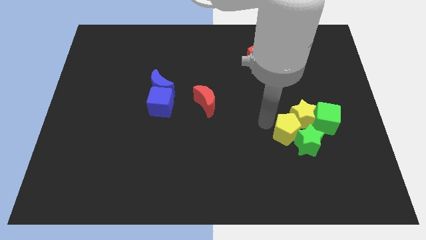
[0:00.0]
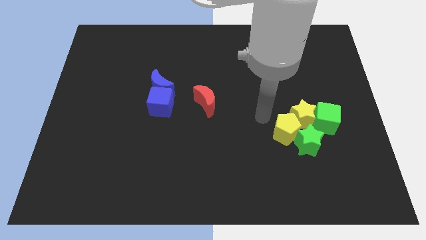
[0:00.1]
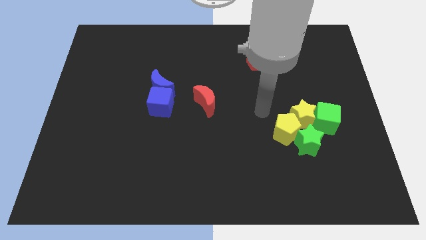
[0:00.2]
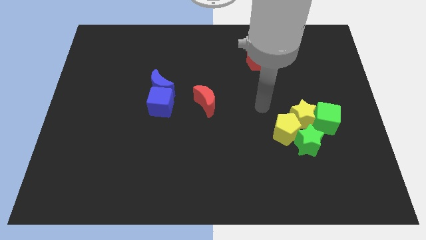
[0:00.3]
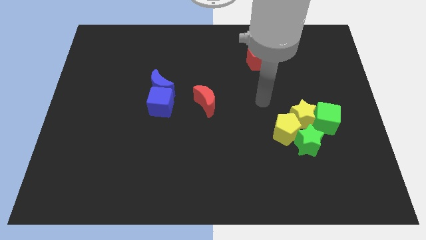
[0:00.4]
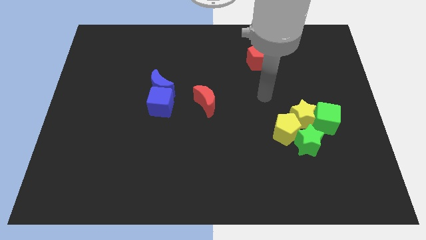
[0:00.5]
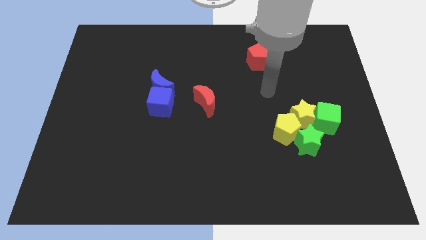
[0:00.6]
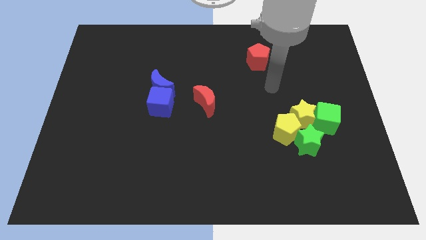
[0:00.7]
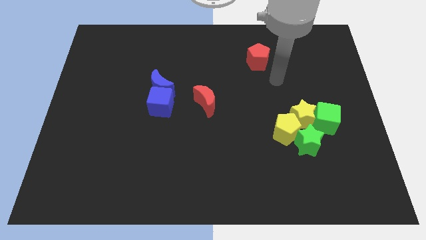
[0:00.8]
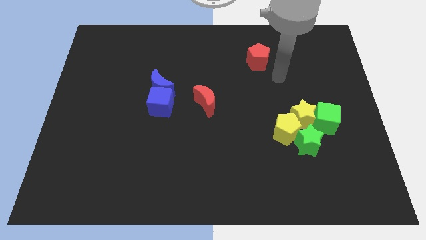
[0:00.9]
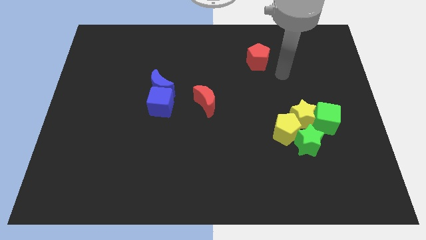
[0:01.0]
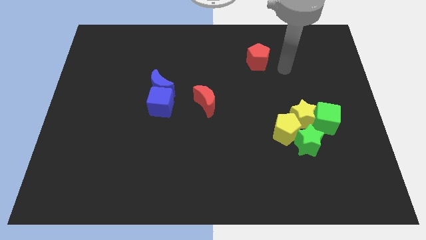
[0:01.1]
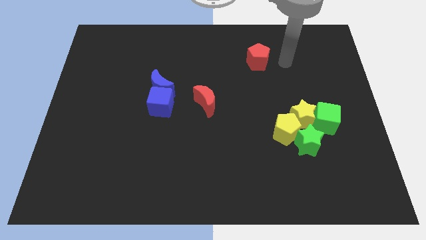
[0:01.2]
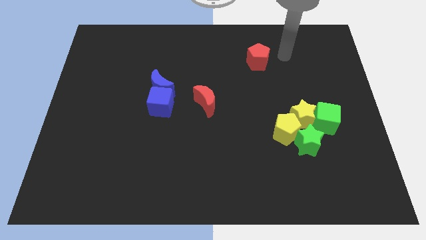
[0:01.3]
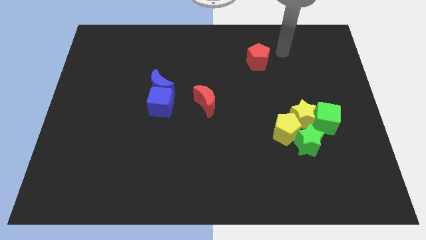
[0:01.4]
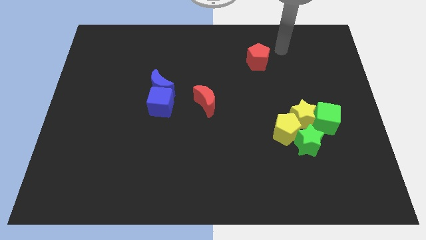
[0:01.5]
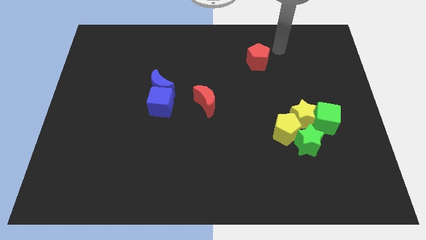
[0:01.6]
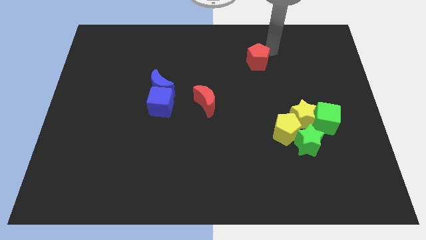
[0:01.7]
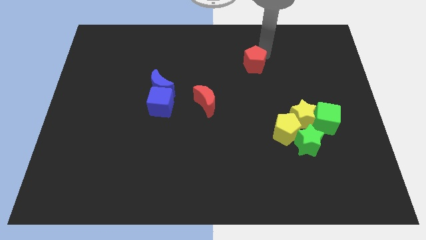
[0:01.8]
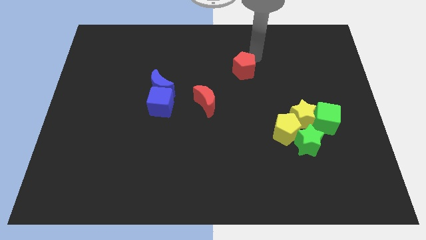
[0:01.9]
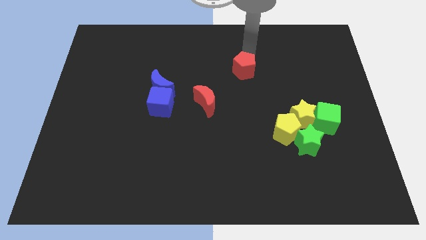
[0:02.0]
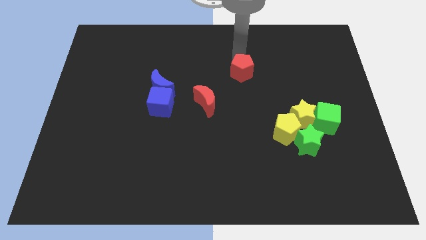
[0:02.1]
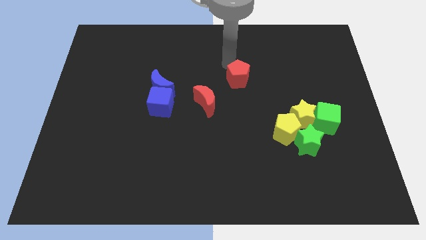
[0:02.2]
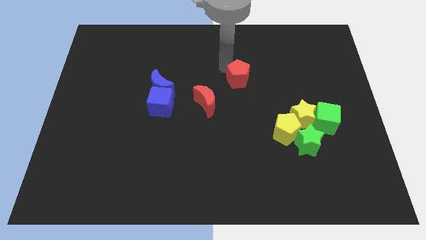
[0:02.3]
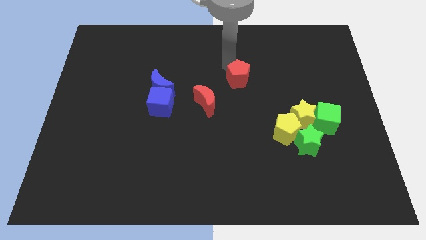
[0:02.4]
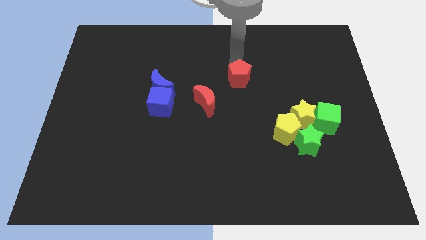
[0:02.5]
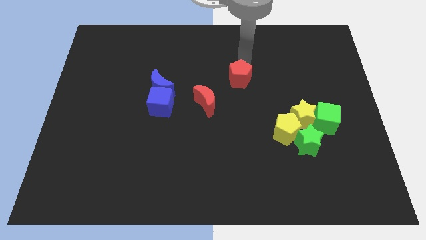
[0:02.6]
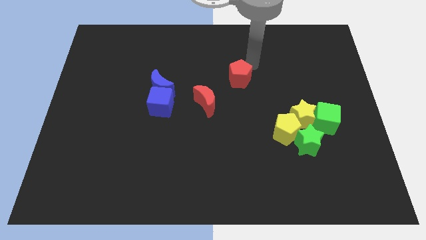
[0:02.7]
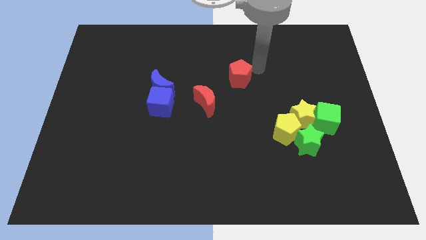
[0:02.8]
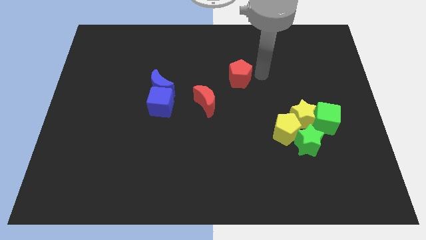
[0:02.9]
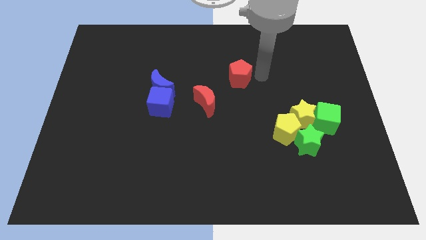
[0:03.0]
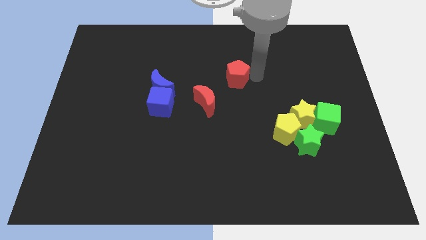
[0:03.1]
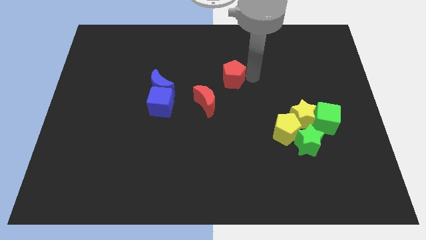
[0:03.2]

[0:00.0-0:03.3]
push the red pentagon towards the center of the board

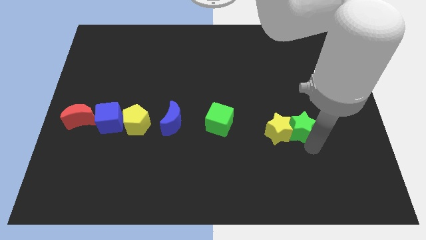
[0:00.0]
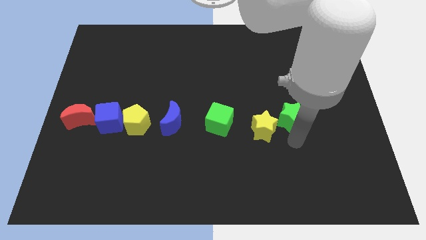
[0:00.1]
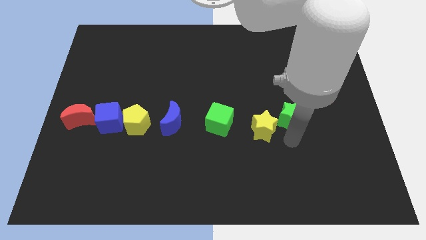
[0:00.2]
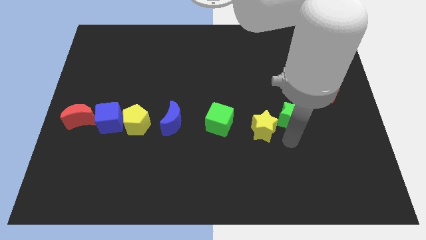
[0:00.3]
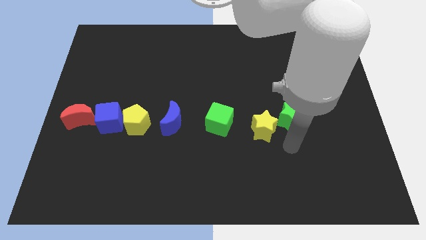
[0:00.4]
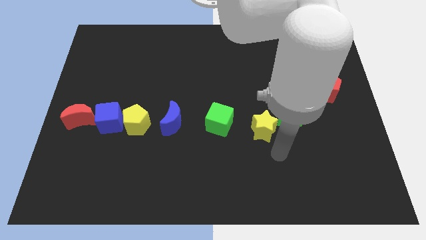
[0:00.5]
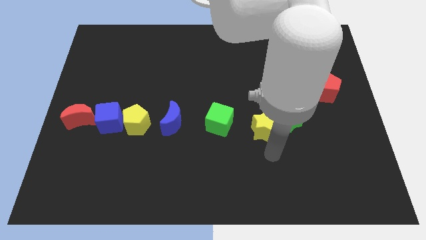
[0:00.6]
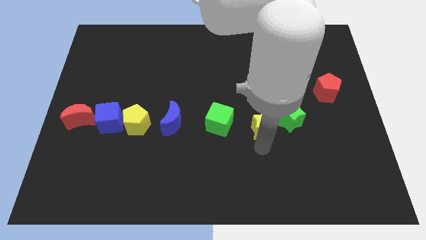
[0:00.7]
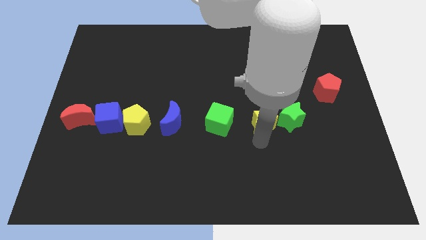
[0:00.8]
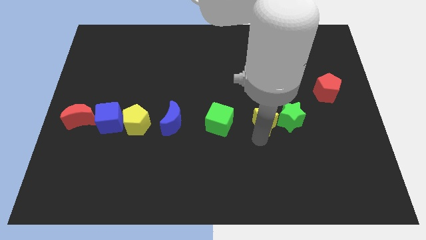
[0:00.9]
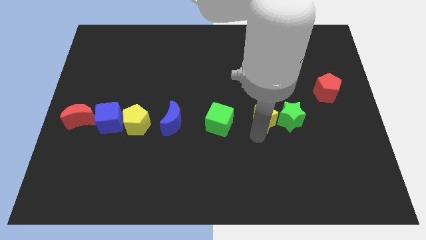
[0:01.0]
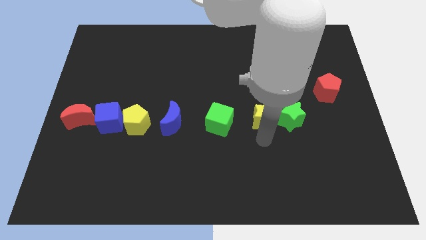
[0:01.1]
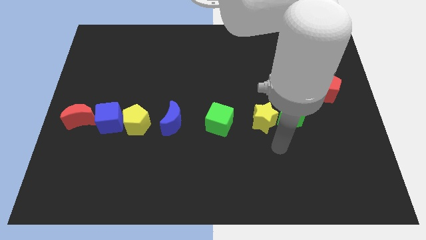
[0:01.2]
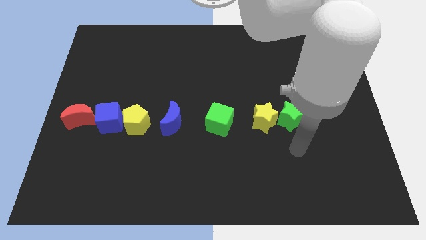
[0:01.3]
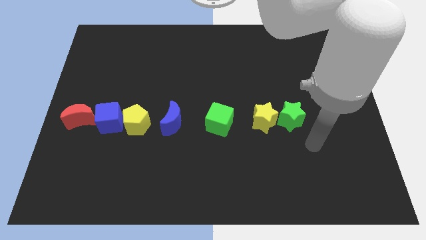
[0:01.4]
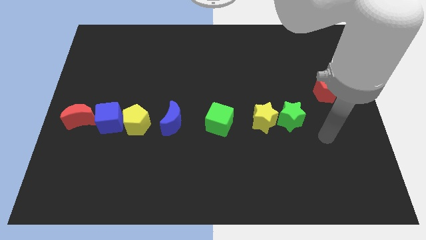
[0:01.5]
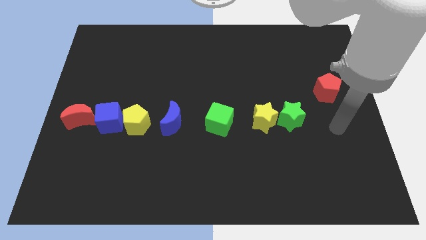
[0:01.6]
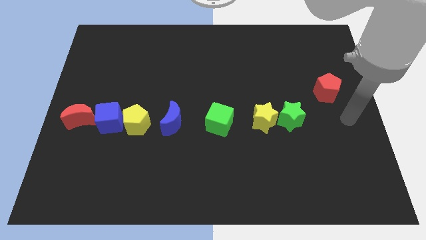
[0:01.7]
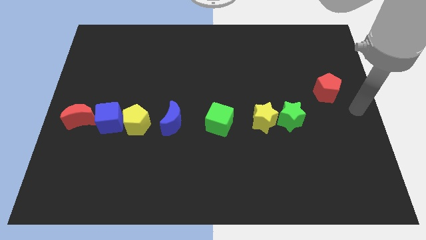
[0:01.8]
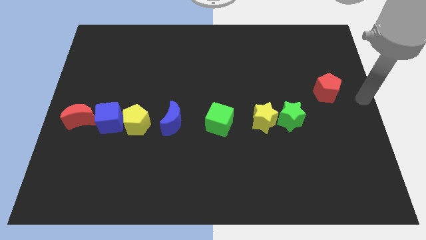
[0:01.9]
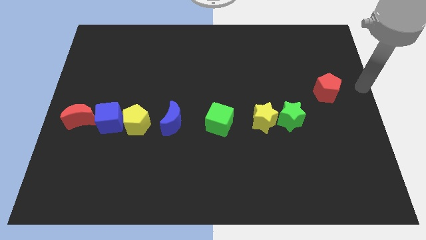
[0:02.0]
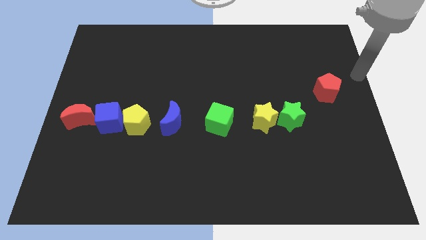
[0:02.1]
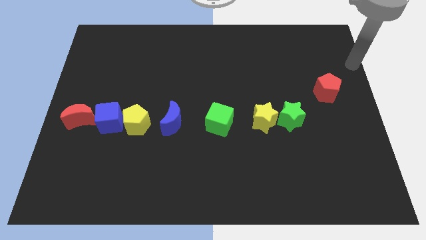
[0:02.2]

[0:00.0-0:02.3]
slightly push the yellow star and green star towards the upwards of the board

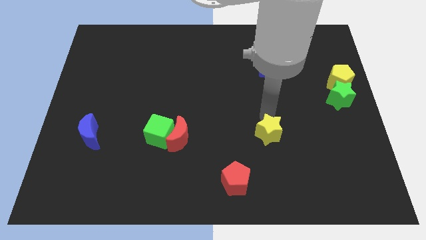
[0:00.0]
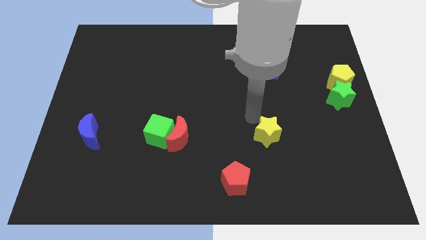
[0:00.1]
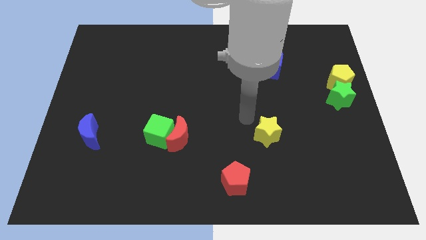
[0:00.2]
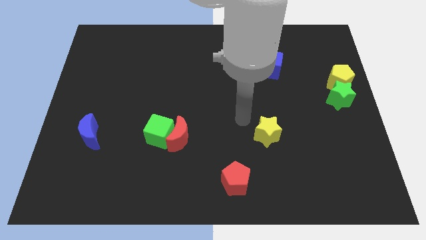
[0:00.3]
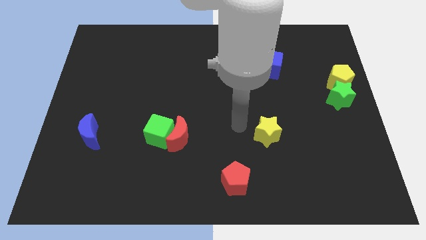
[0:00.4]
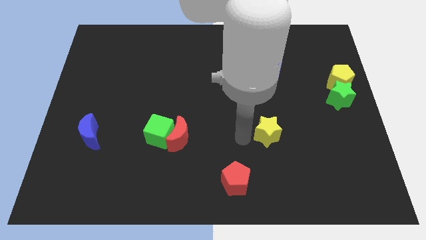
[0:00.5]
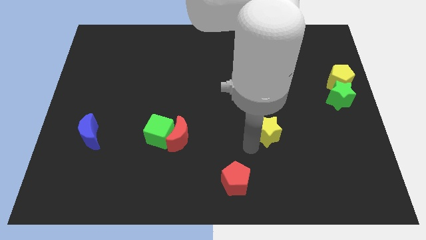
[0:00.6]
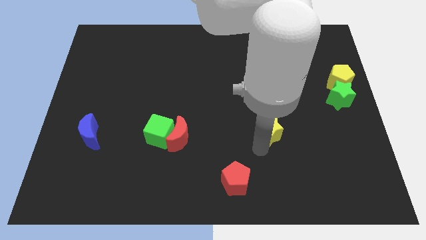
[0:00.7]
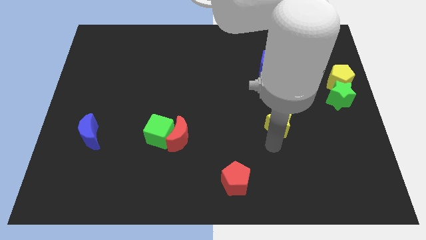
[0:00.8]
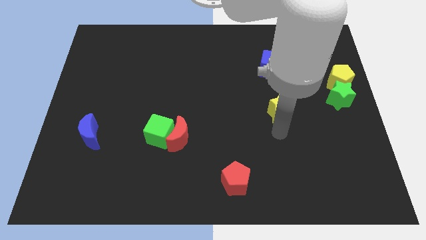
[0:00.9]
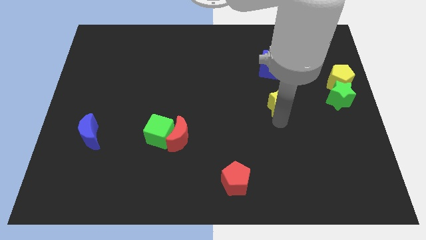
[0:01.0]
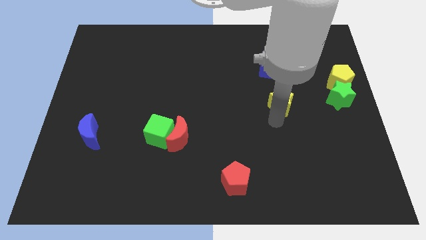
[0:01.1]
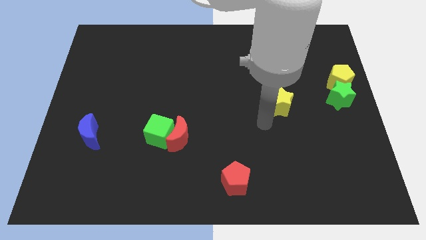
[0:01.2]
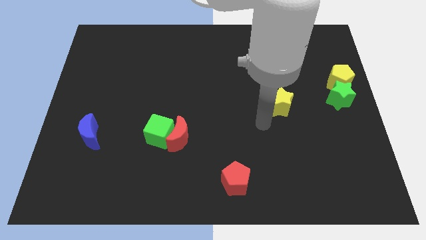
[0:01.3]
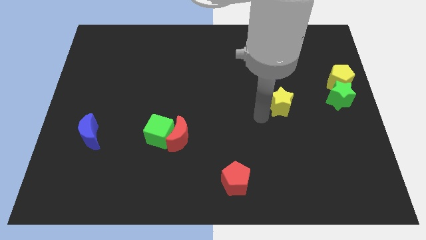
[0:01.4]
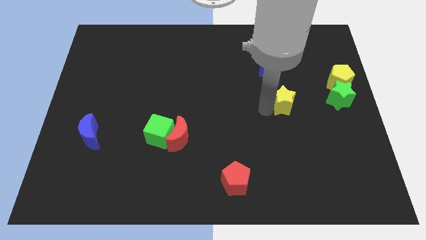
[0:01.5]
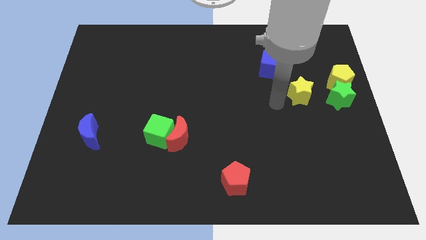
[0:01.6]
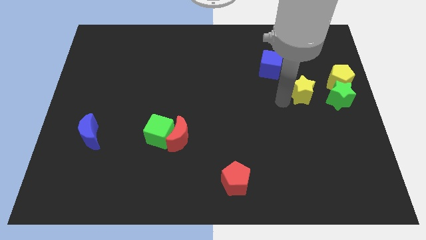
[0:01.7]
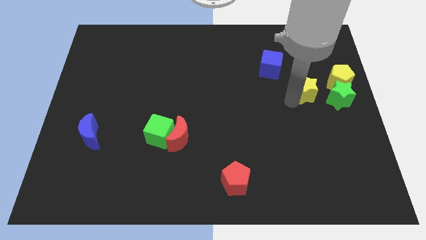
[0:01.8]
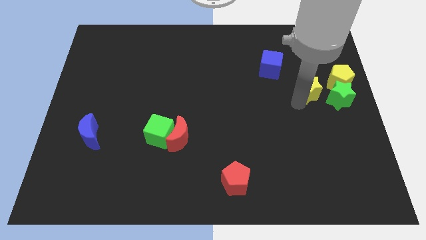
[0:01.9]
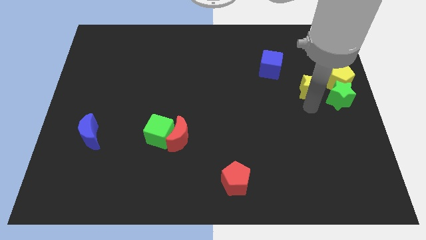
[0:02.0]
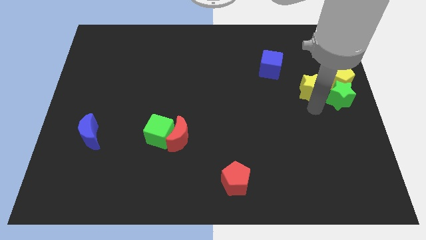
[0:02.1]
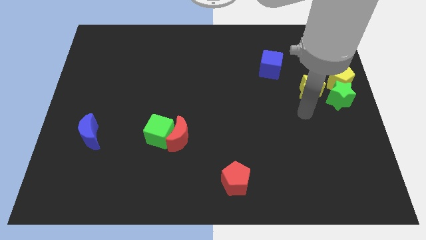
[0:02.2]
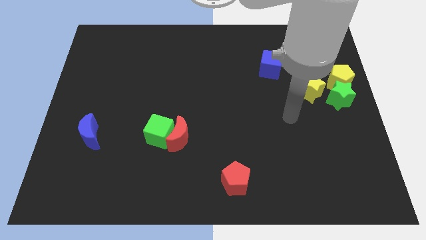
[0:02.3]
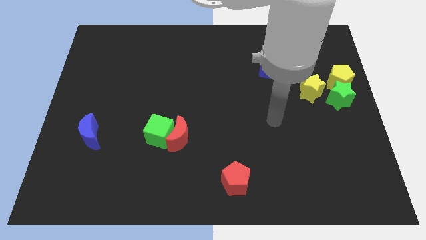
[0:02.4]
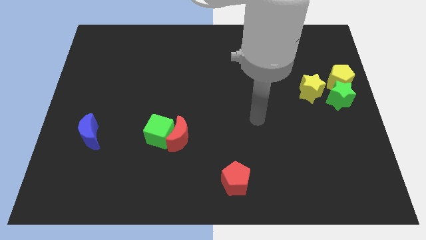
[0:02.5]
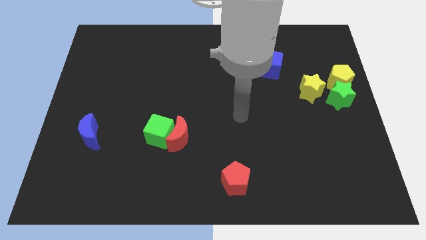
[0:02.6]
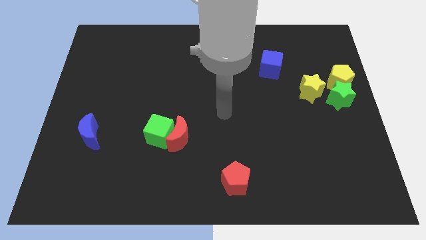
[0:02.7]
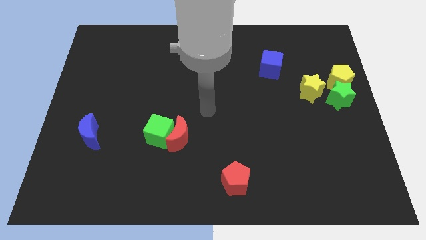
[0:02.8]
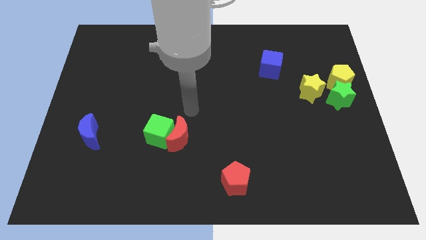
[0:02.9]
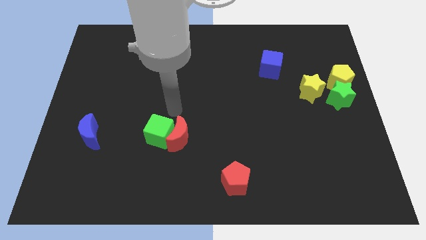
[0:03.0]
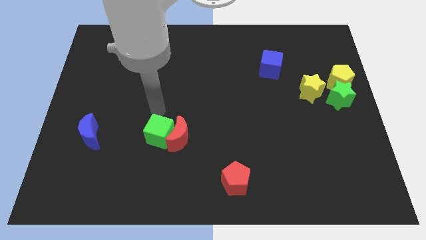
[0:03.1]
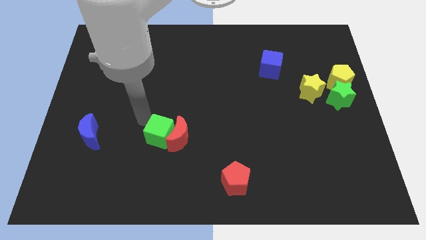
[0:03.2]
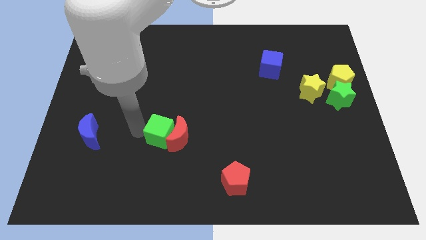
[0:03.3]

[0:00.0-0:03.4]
push the yellow star into the yellow pentagon

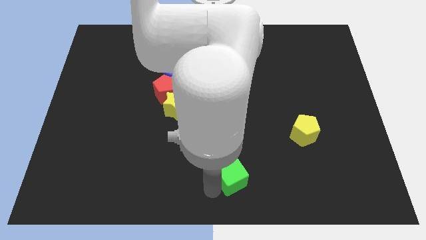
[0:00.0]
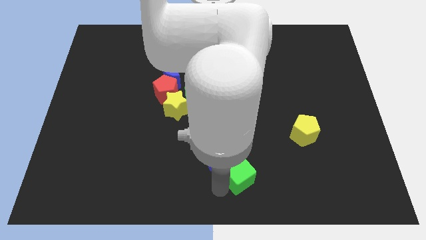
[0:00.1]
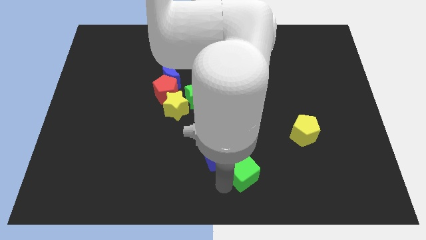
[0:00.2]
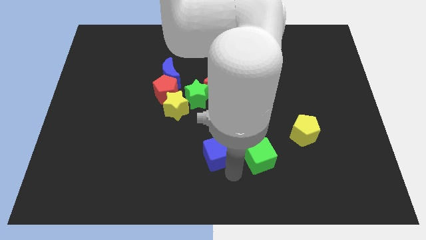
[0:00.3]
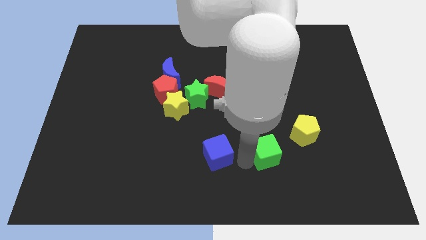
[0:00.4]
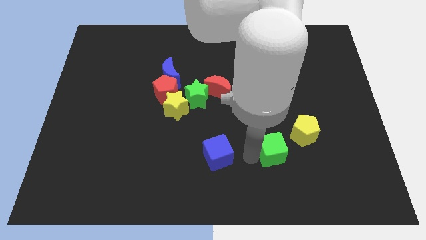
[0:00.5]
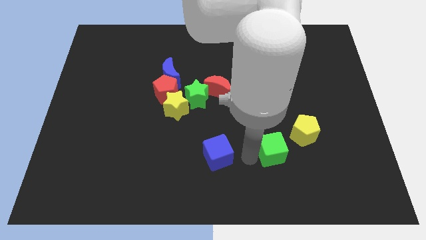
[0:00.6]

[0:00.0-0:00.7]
place the green cube left to the yellow pentagon
